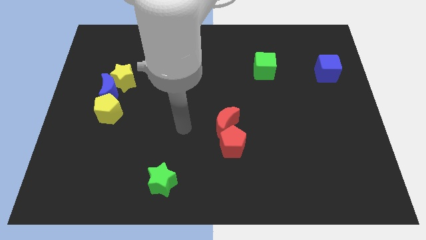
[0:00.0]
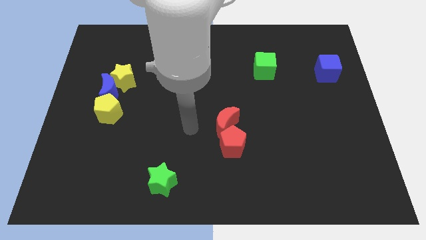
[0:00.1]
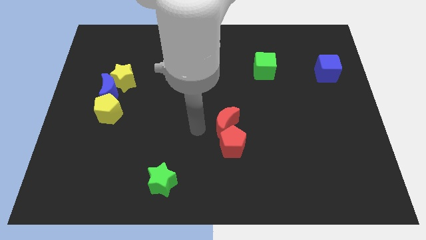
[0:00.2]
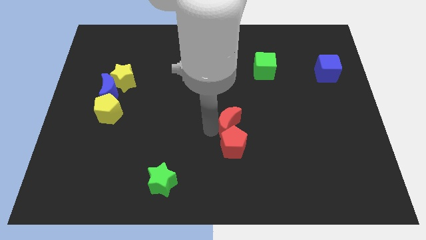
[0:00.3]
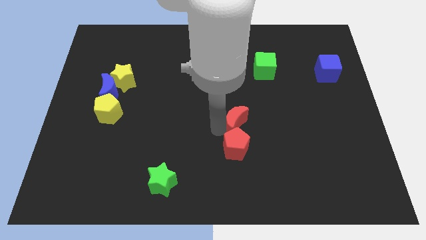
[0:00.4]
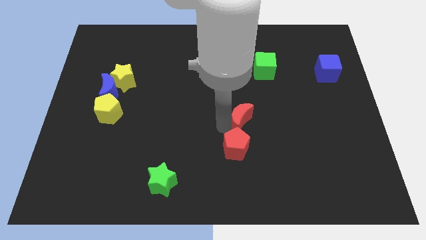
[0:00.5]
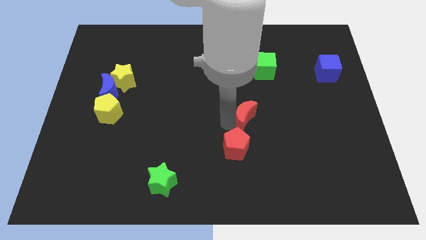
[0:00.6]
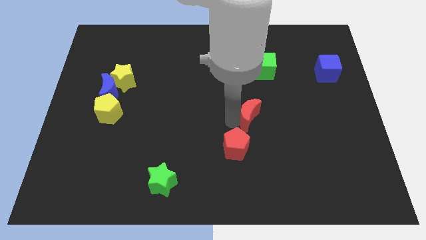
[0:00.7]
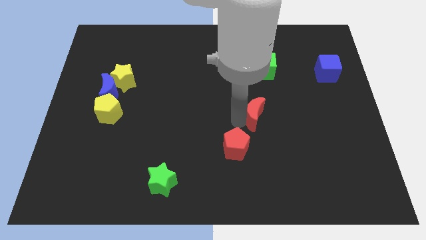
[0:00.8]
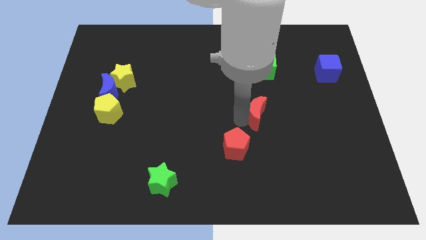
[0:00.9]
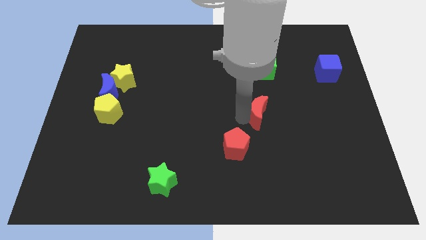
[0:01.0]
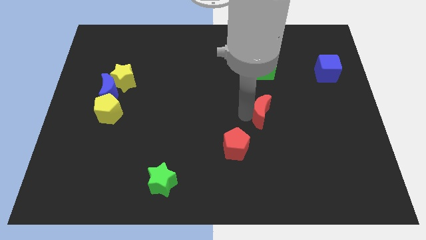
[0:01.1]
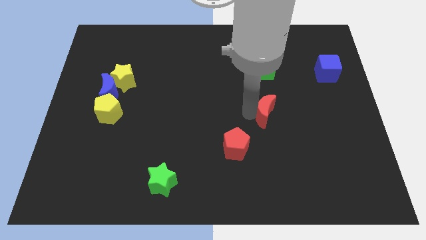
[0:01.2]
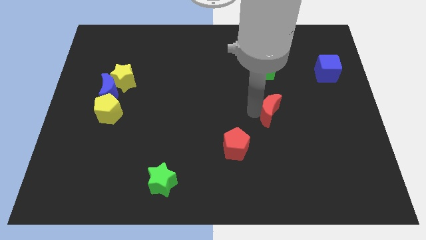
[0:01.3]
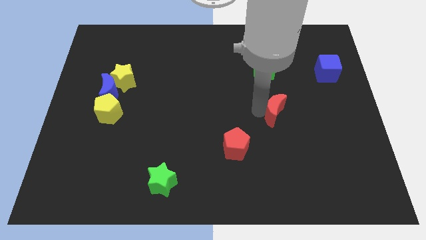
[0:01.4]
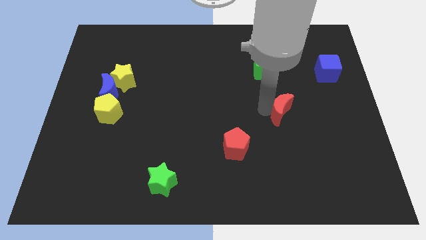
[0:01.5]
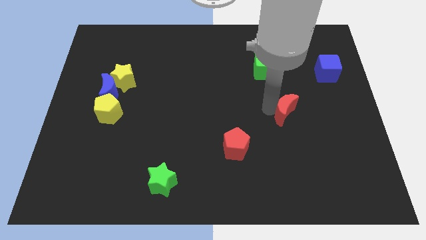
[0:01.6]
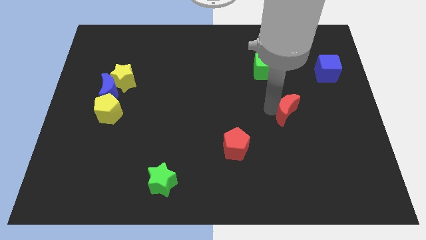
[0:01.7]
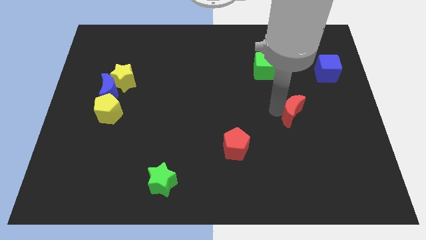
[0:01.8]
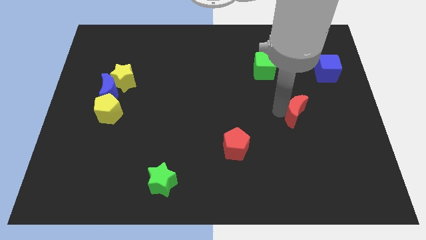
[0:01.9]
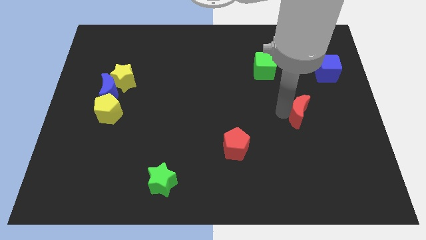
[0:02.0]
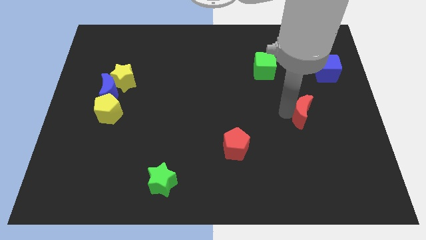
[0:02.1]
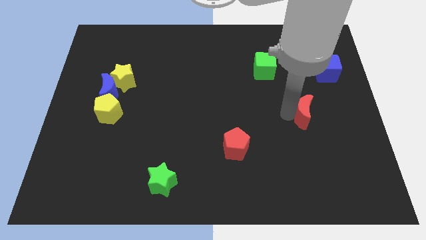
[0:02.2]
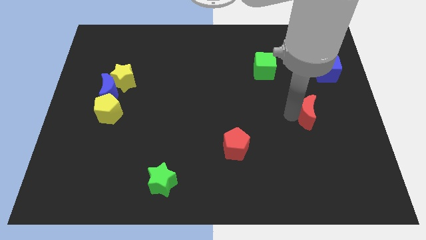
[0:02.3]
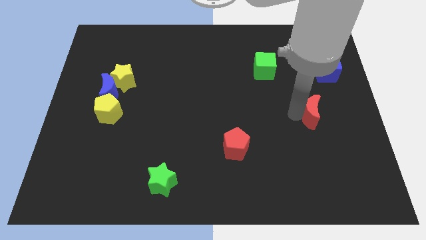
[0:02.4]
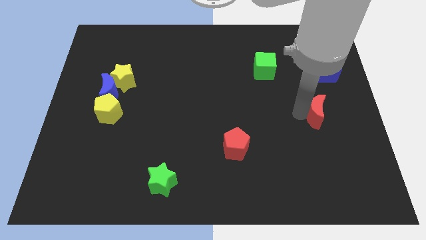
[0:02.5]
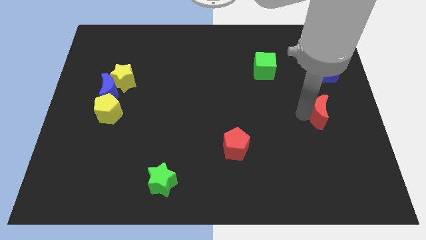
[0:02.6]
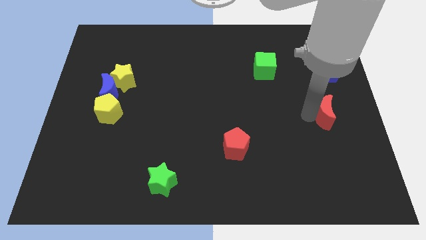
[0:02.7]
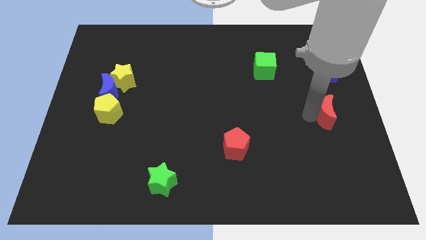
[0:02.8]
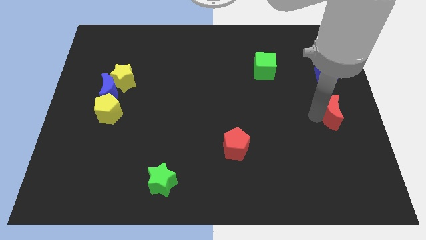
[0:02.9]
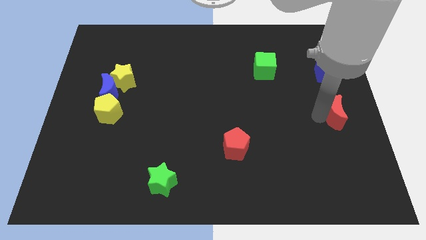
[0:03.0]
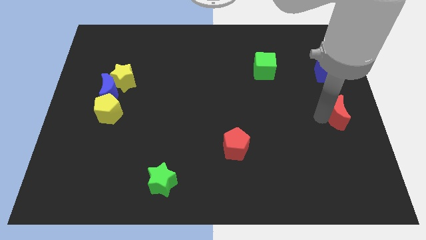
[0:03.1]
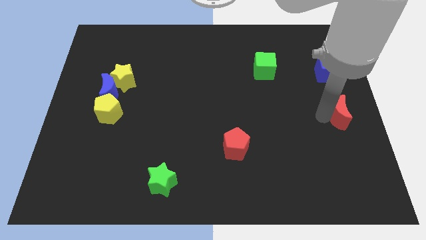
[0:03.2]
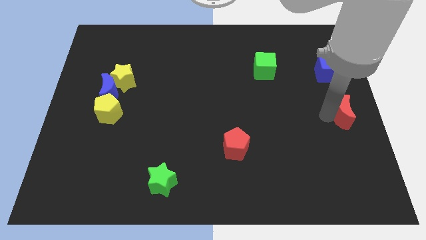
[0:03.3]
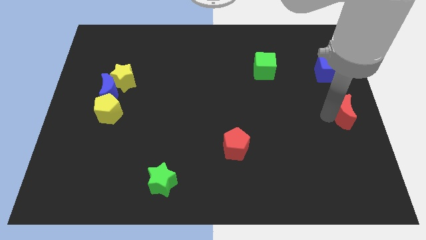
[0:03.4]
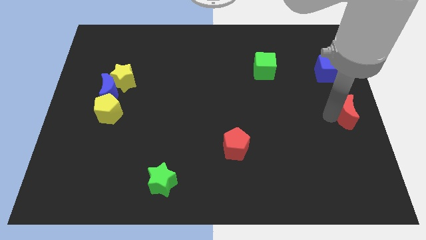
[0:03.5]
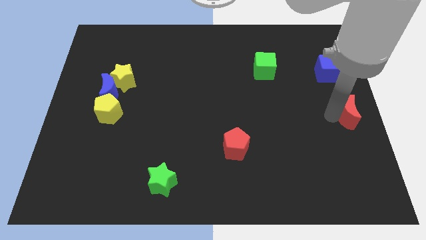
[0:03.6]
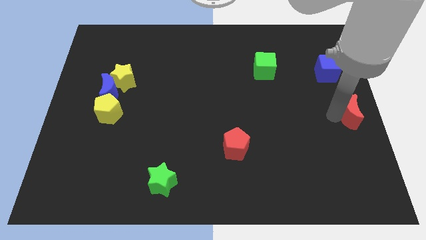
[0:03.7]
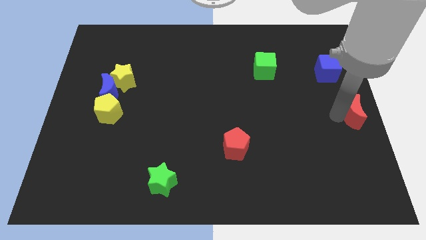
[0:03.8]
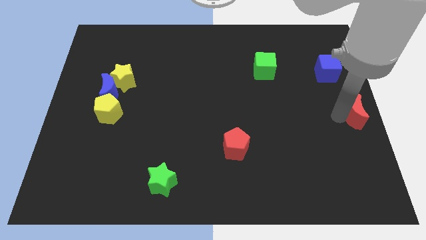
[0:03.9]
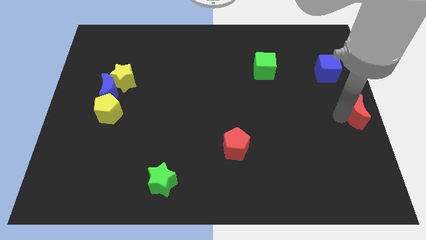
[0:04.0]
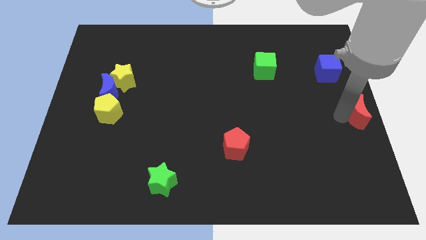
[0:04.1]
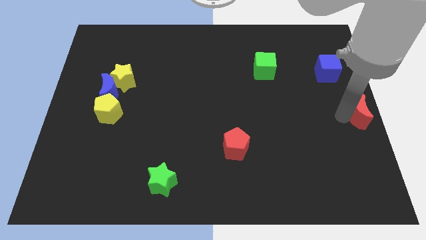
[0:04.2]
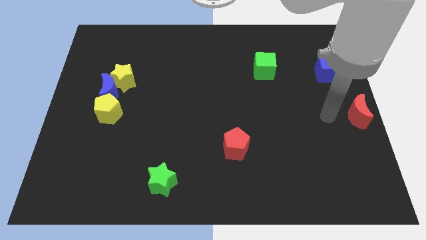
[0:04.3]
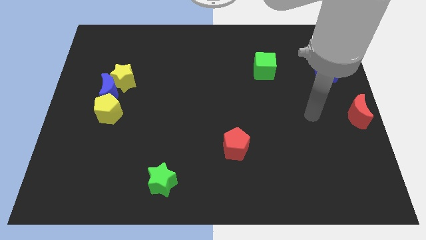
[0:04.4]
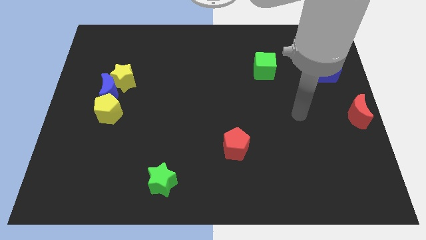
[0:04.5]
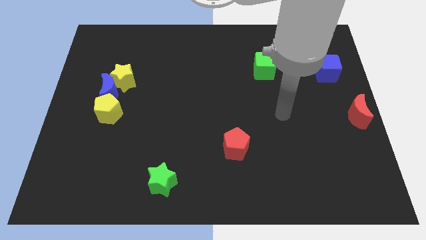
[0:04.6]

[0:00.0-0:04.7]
push red moon to the right center of the board

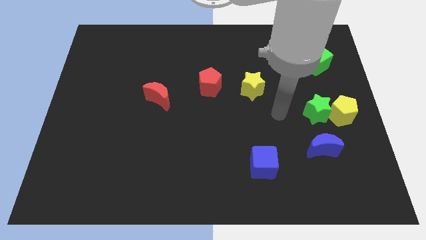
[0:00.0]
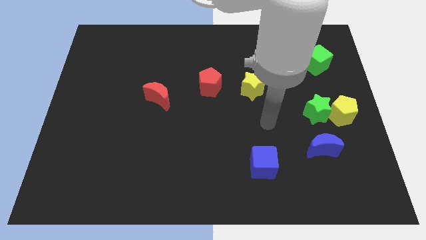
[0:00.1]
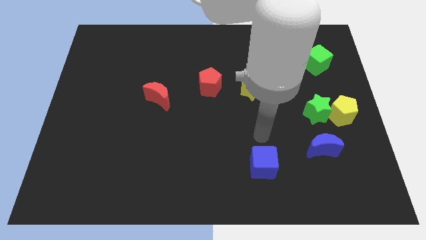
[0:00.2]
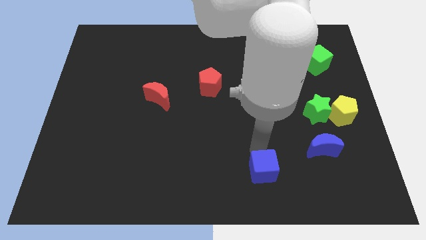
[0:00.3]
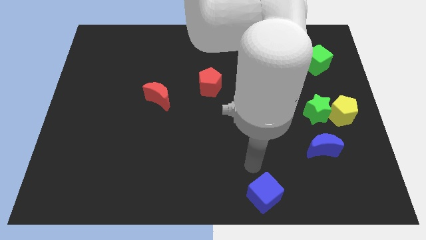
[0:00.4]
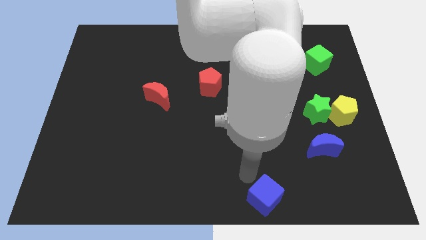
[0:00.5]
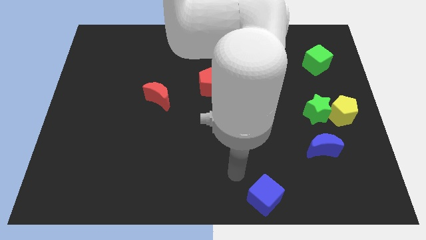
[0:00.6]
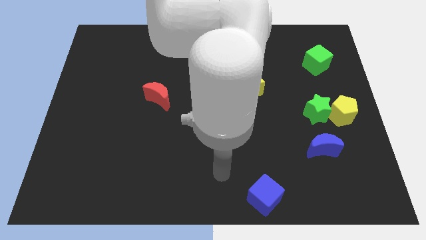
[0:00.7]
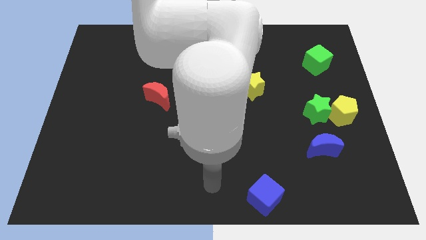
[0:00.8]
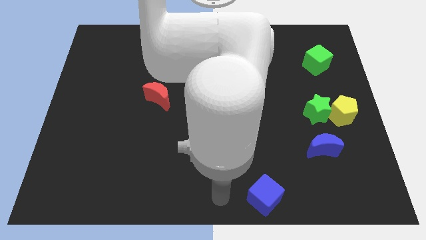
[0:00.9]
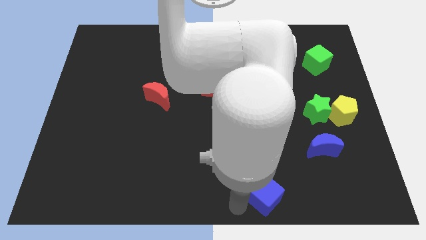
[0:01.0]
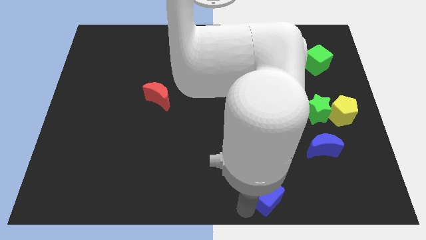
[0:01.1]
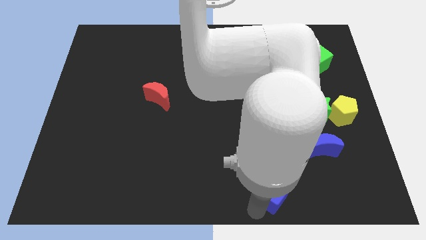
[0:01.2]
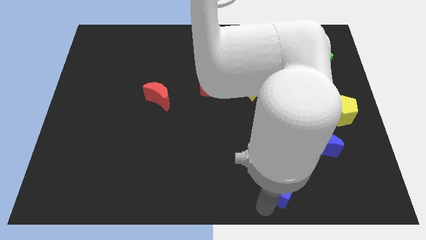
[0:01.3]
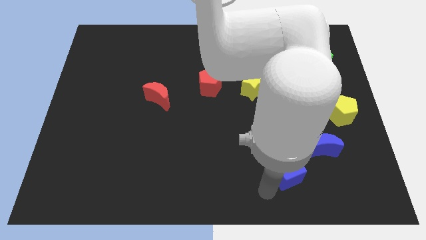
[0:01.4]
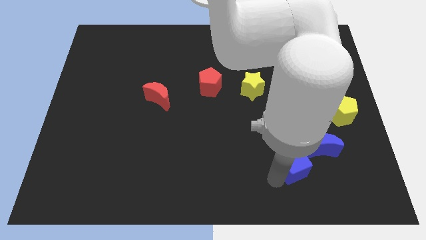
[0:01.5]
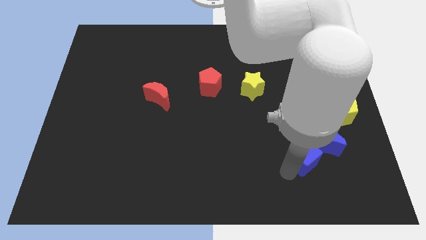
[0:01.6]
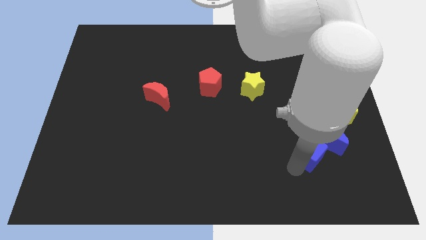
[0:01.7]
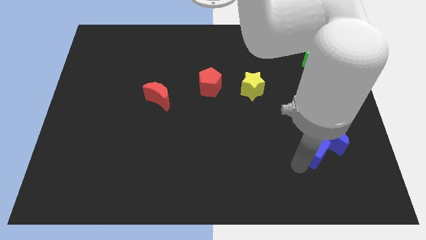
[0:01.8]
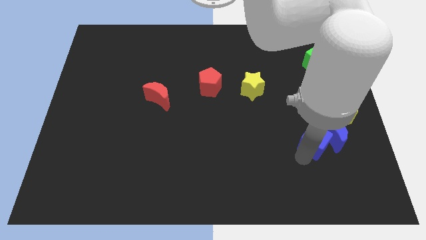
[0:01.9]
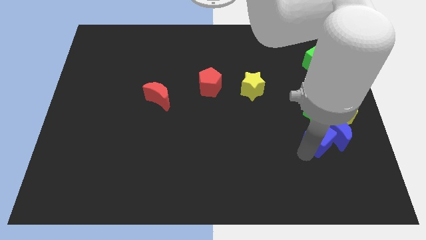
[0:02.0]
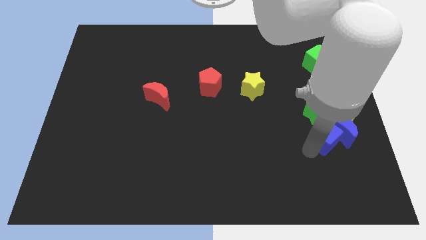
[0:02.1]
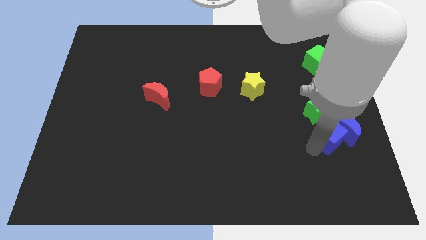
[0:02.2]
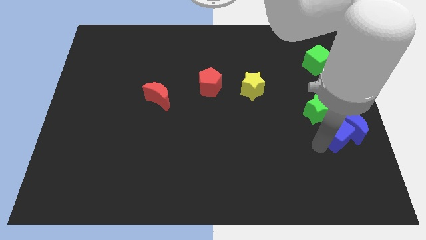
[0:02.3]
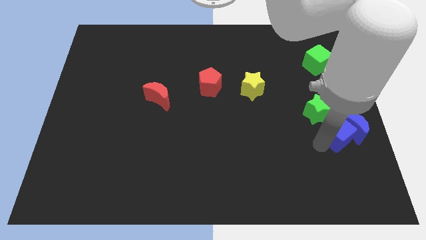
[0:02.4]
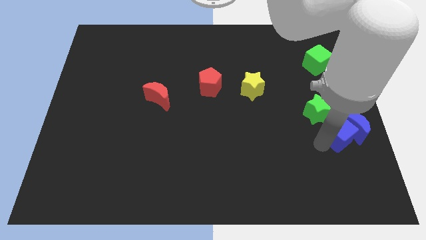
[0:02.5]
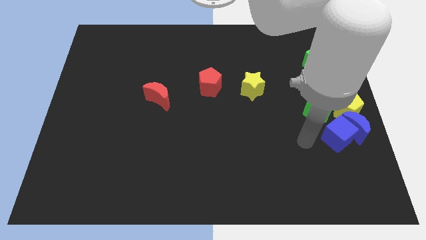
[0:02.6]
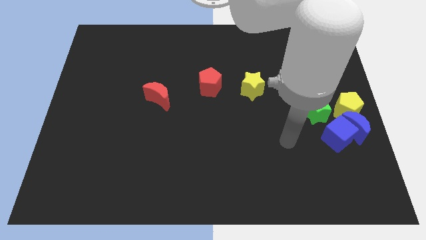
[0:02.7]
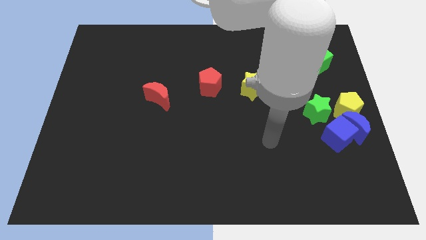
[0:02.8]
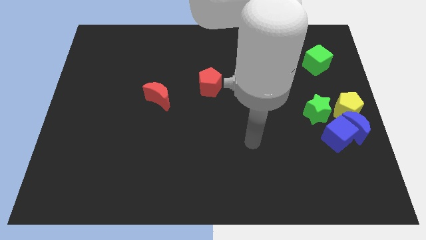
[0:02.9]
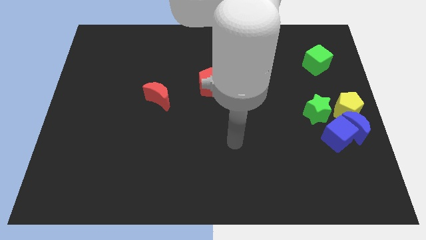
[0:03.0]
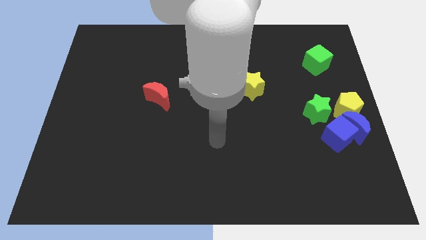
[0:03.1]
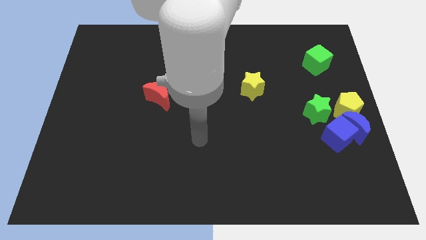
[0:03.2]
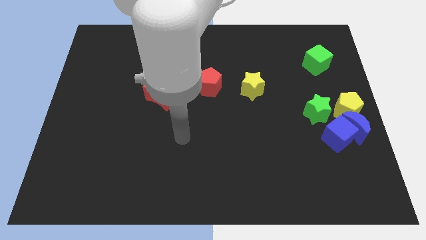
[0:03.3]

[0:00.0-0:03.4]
push the blue crescent with the help of a blue cube towards the yellow pentagon

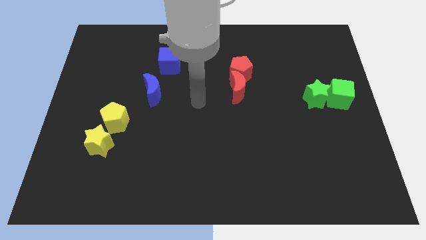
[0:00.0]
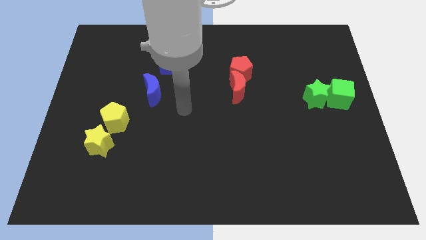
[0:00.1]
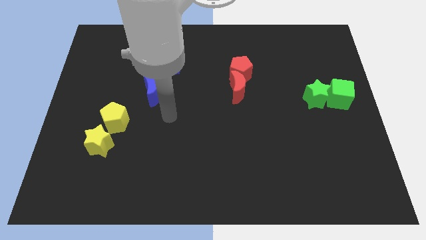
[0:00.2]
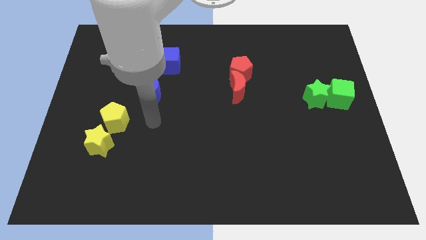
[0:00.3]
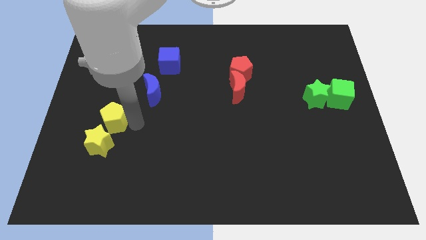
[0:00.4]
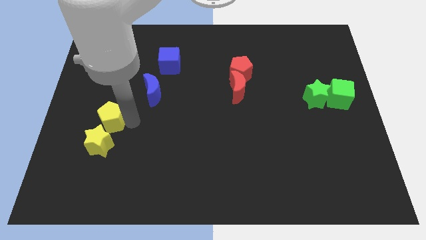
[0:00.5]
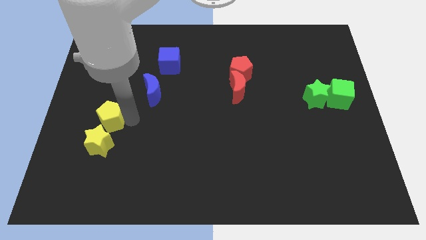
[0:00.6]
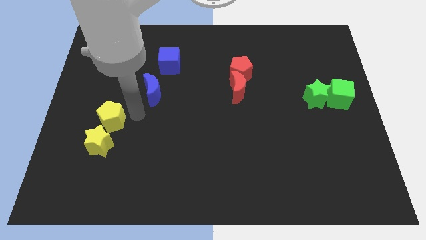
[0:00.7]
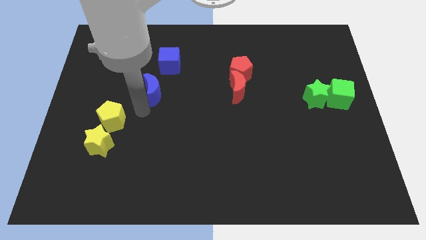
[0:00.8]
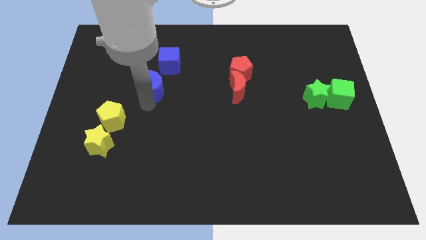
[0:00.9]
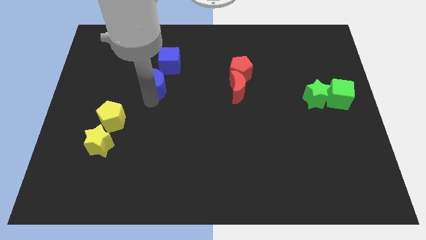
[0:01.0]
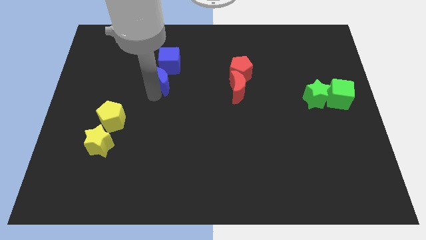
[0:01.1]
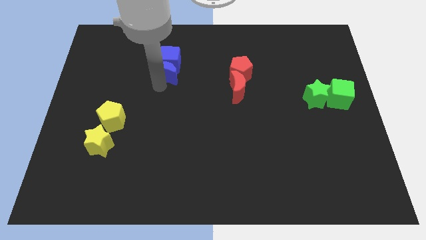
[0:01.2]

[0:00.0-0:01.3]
move the blue crescent below the blue cube
